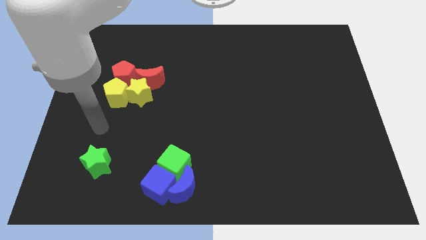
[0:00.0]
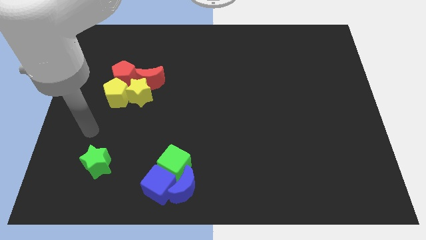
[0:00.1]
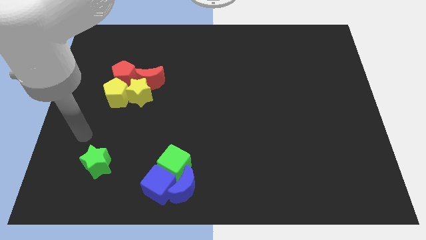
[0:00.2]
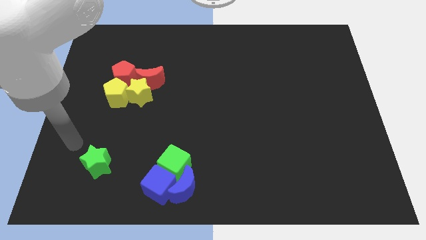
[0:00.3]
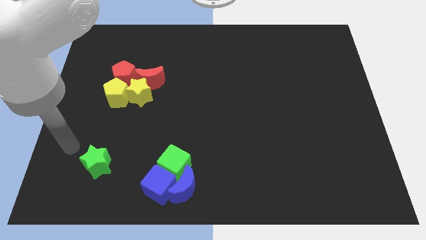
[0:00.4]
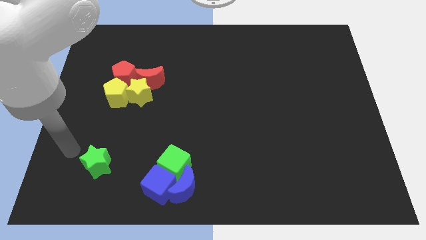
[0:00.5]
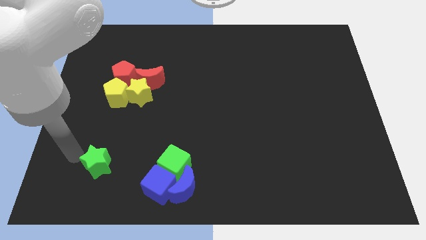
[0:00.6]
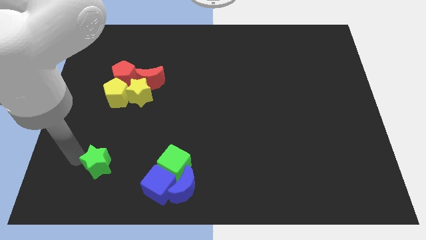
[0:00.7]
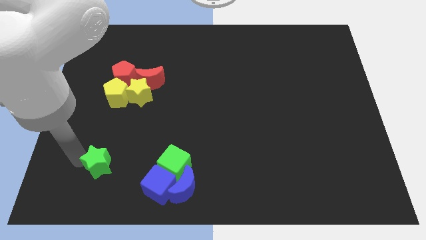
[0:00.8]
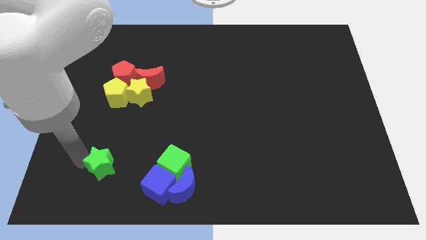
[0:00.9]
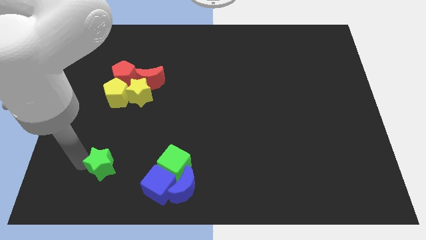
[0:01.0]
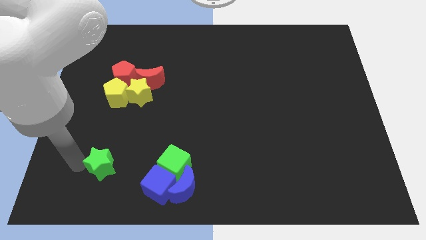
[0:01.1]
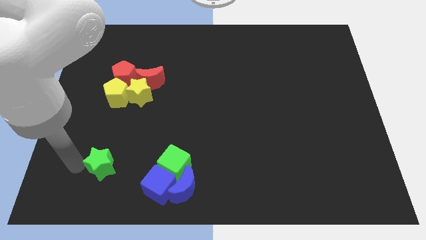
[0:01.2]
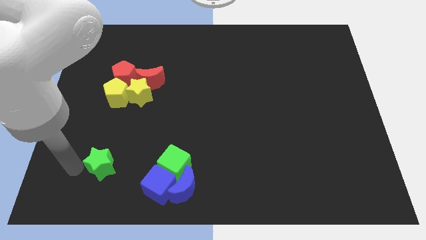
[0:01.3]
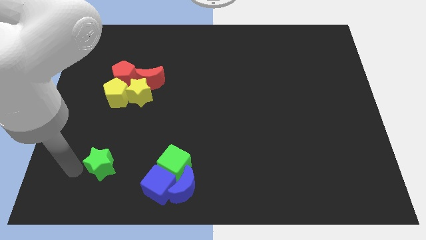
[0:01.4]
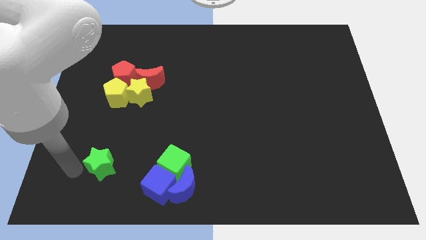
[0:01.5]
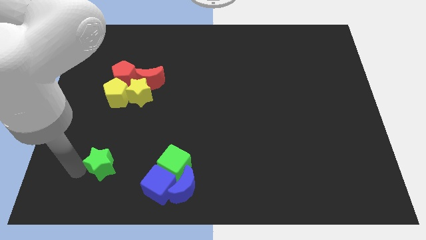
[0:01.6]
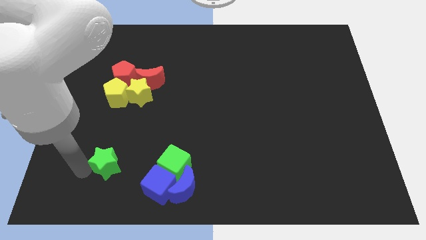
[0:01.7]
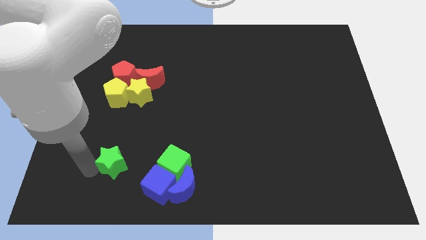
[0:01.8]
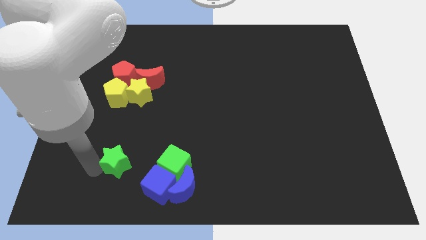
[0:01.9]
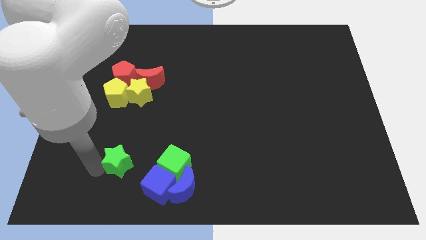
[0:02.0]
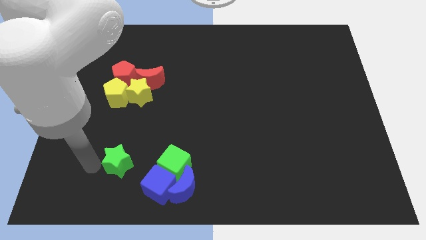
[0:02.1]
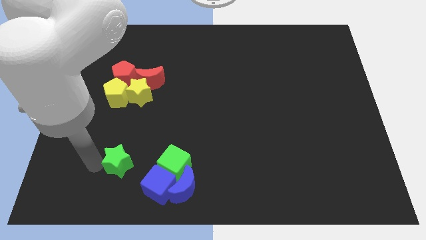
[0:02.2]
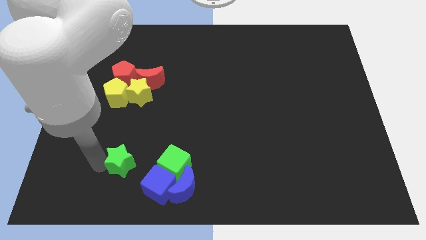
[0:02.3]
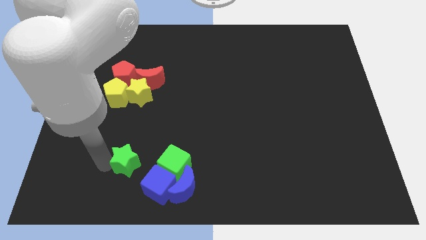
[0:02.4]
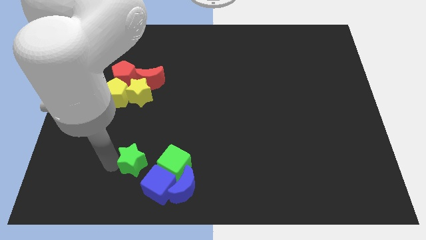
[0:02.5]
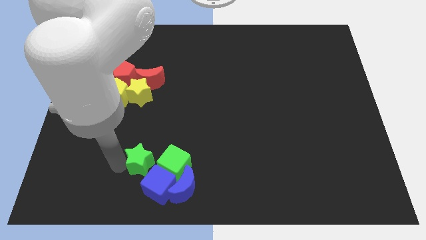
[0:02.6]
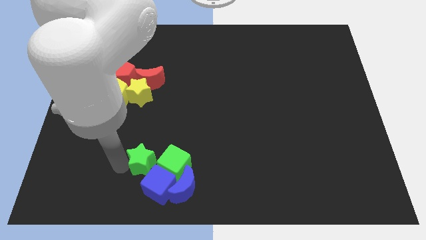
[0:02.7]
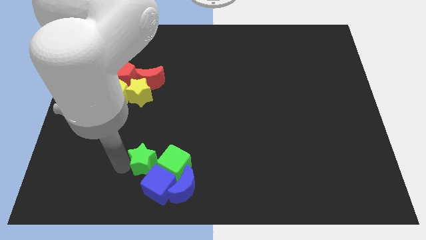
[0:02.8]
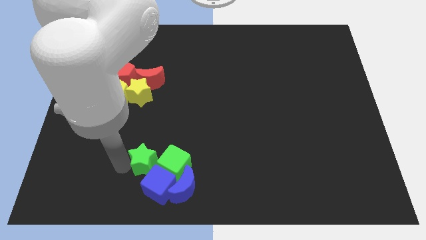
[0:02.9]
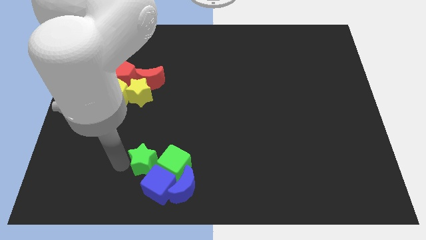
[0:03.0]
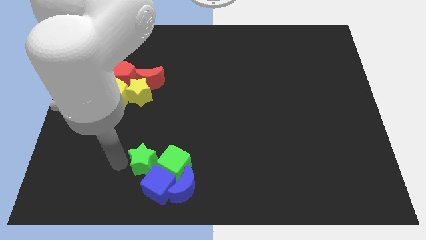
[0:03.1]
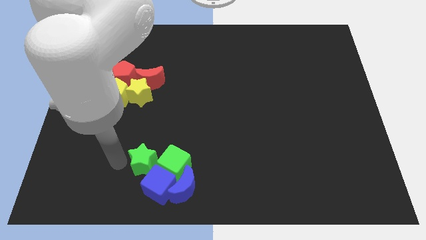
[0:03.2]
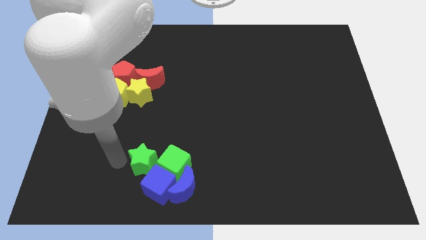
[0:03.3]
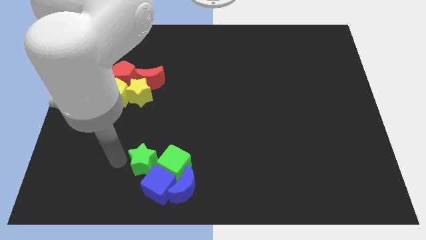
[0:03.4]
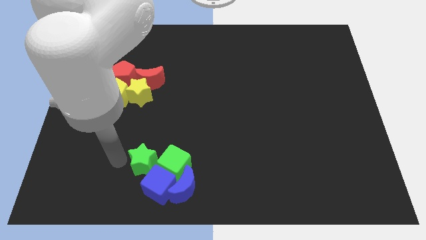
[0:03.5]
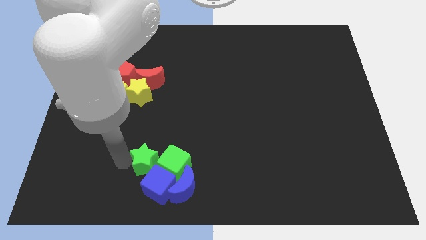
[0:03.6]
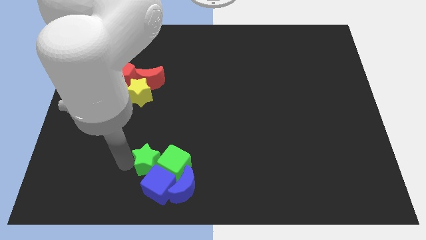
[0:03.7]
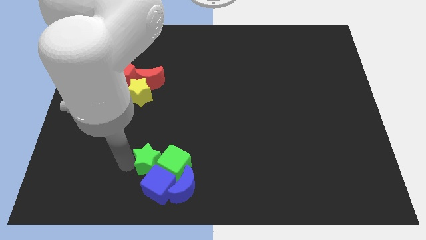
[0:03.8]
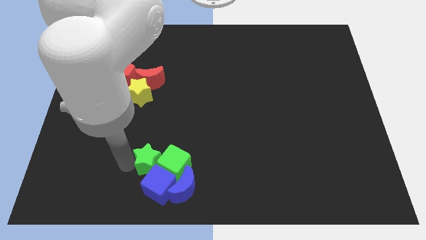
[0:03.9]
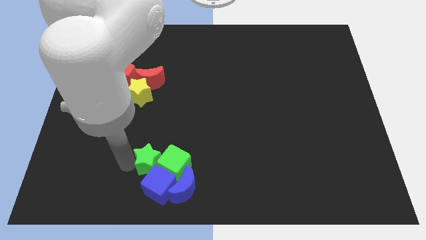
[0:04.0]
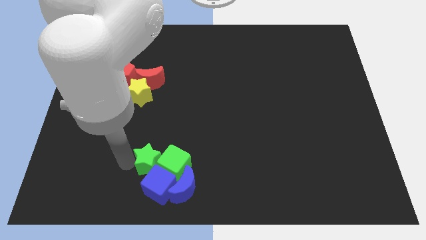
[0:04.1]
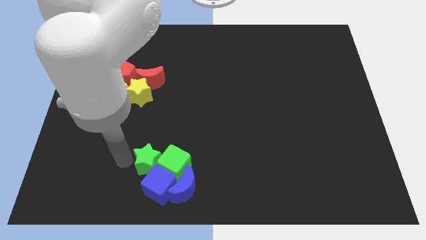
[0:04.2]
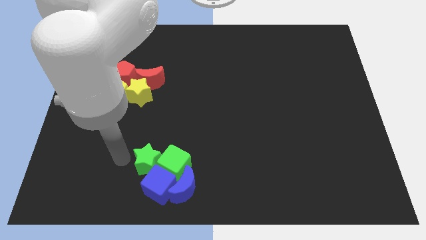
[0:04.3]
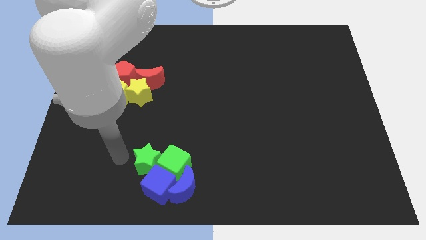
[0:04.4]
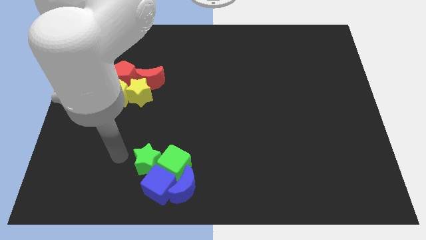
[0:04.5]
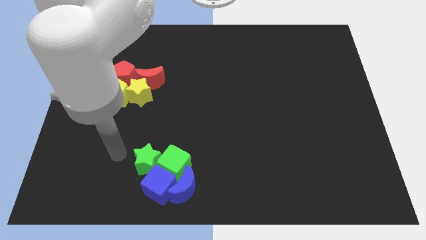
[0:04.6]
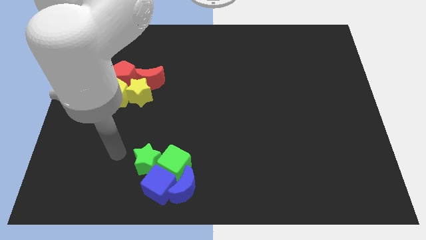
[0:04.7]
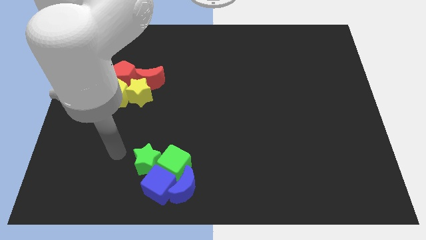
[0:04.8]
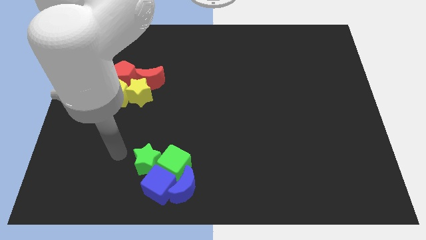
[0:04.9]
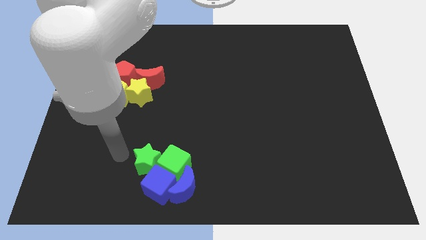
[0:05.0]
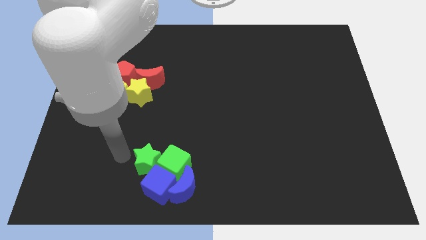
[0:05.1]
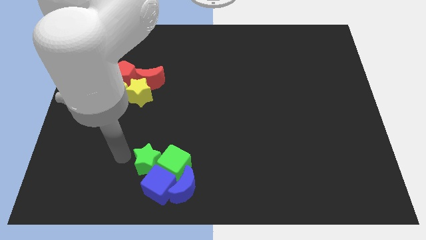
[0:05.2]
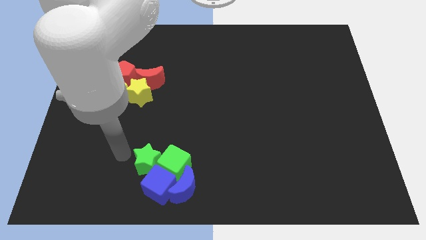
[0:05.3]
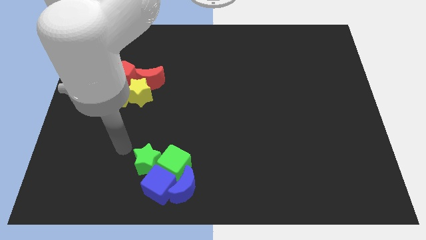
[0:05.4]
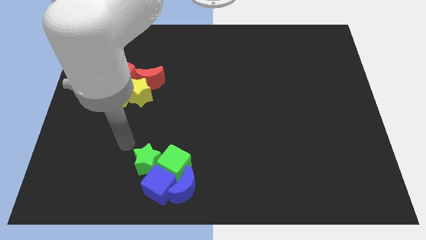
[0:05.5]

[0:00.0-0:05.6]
push the green star to the left side of the green cube

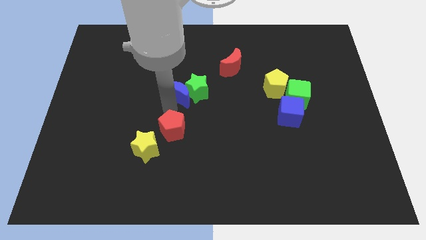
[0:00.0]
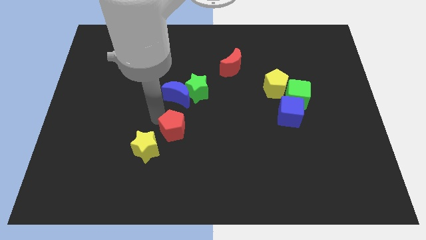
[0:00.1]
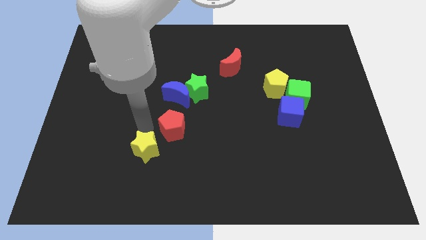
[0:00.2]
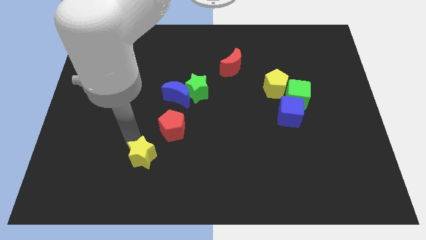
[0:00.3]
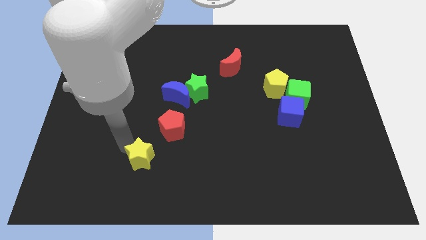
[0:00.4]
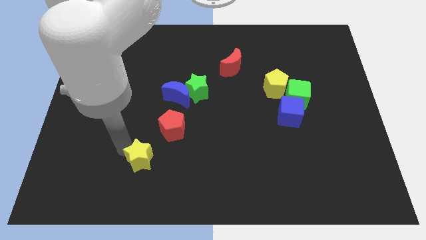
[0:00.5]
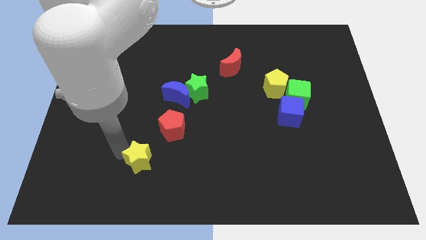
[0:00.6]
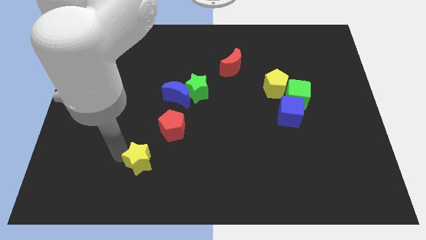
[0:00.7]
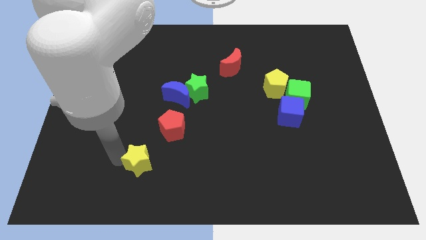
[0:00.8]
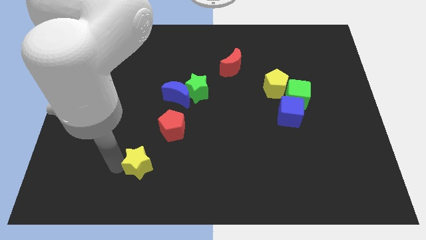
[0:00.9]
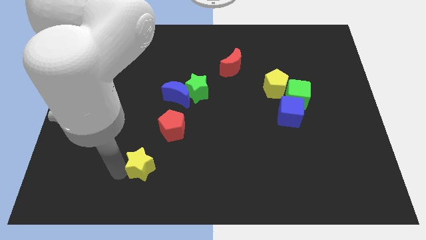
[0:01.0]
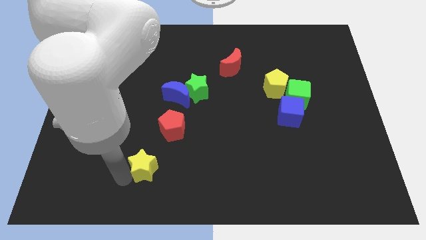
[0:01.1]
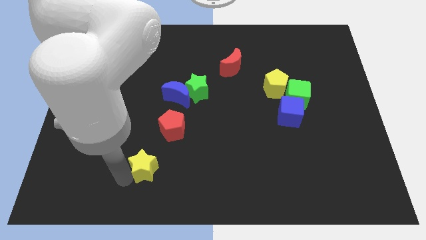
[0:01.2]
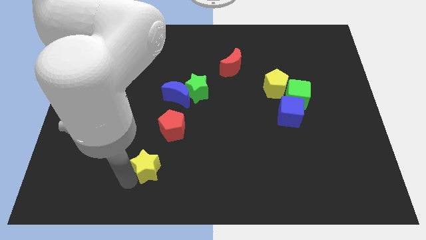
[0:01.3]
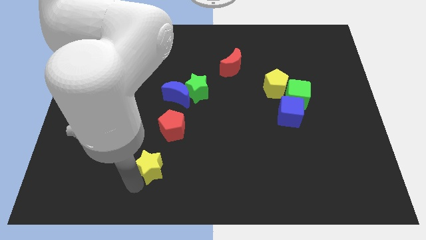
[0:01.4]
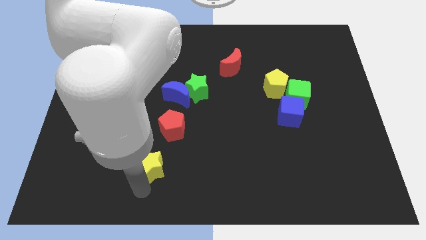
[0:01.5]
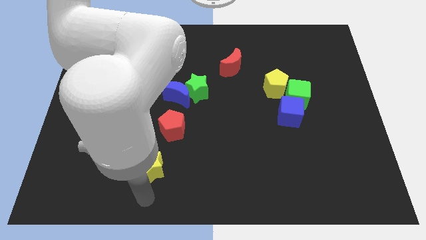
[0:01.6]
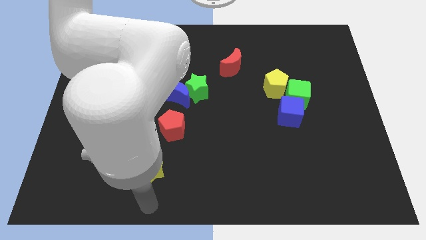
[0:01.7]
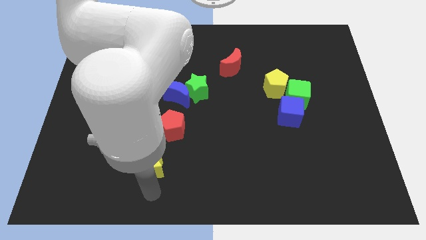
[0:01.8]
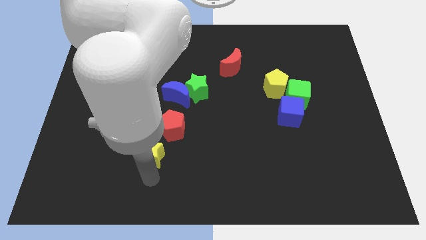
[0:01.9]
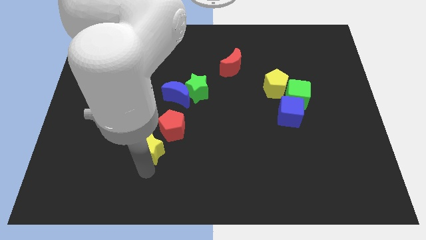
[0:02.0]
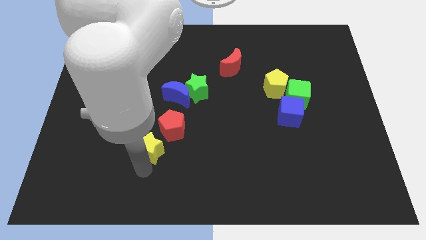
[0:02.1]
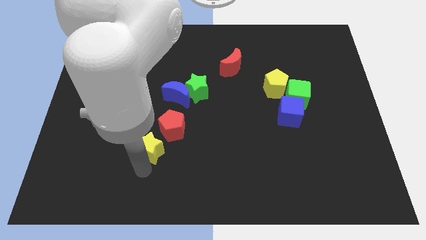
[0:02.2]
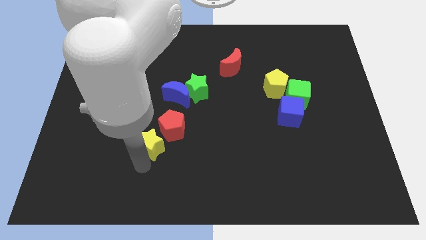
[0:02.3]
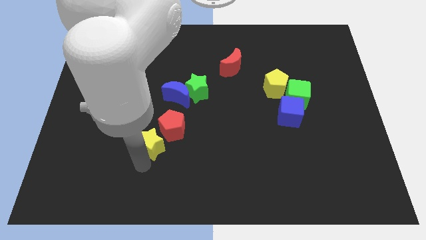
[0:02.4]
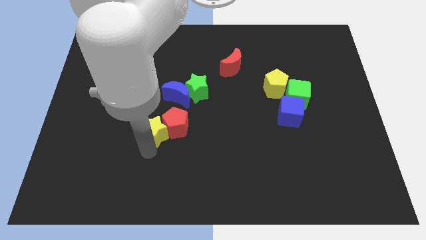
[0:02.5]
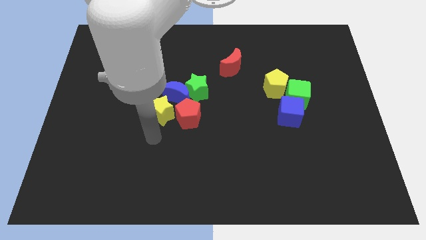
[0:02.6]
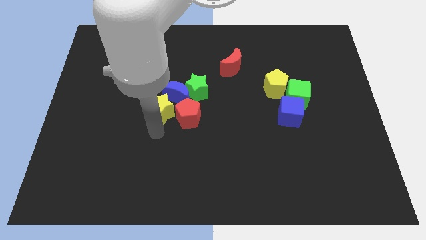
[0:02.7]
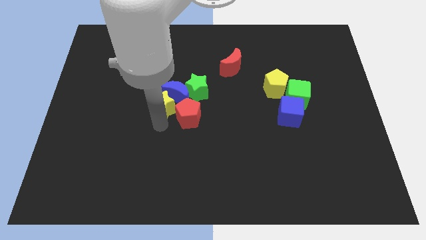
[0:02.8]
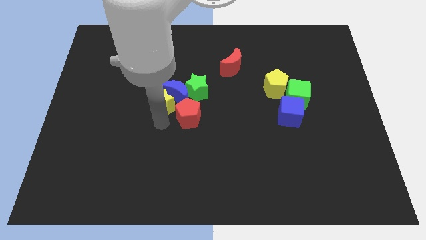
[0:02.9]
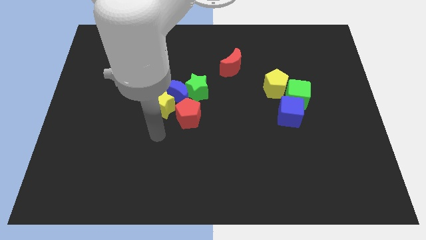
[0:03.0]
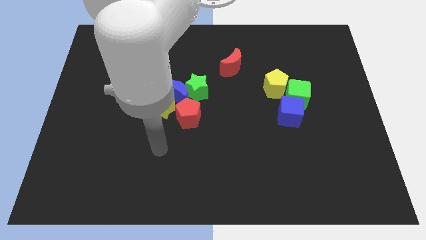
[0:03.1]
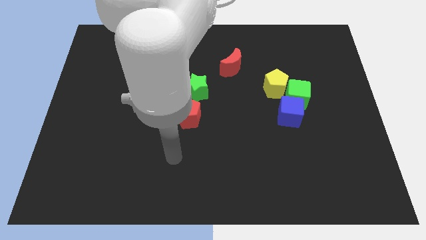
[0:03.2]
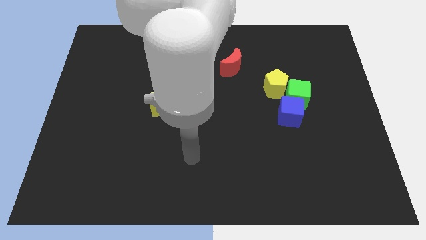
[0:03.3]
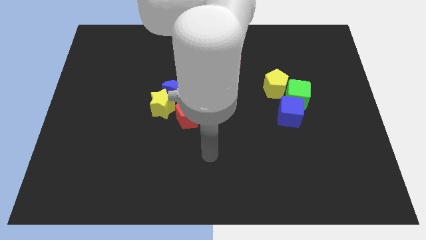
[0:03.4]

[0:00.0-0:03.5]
push the yellow star into the blue crescent
